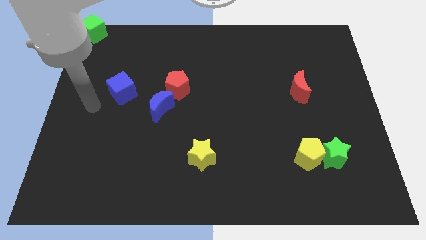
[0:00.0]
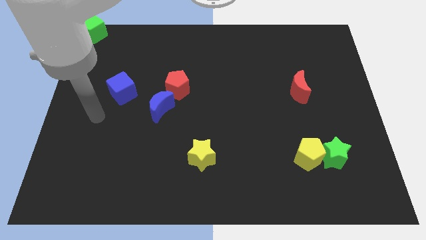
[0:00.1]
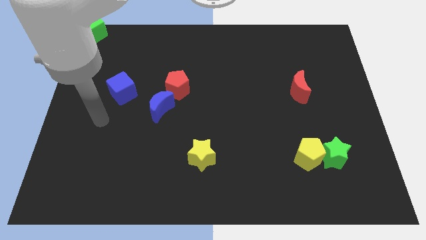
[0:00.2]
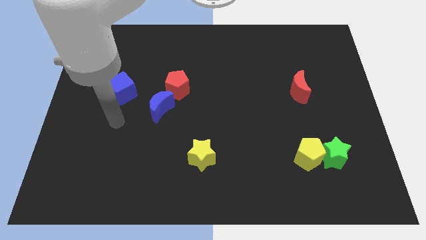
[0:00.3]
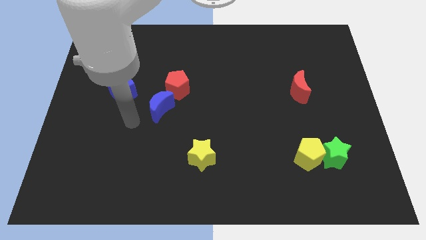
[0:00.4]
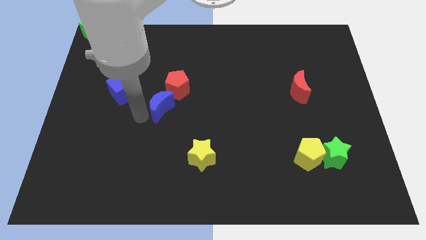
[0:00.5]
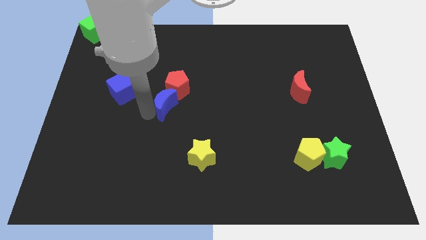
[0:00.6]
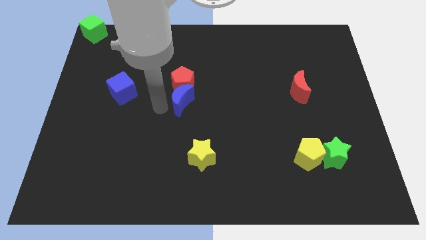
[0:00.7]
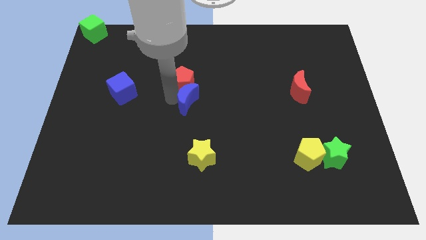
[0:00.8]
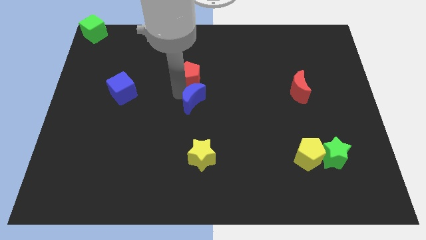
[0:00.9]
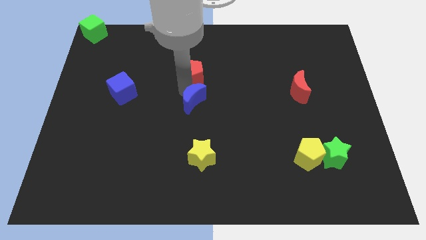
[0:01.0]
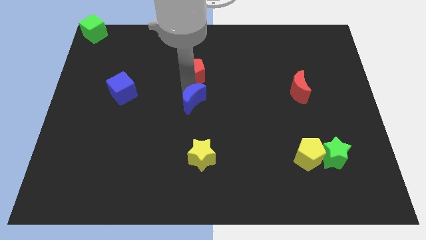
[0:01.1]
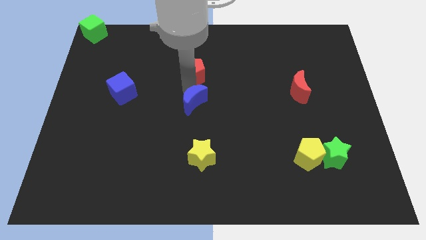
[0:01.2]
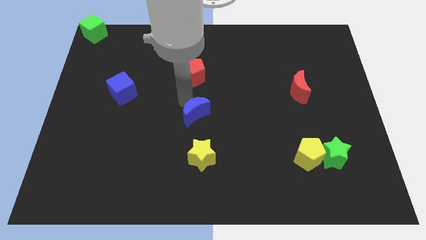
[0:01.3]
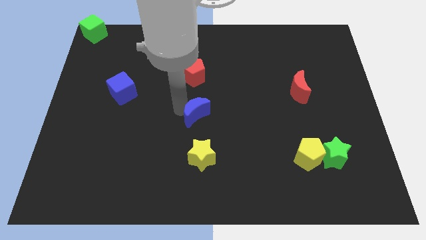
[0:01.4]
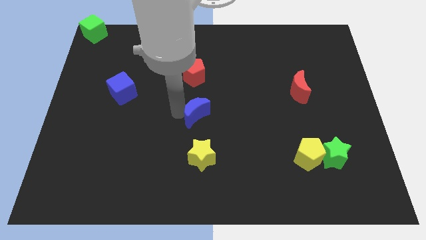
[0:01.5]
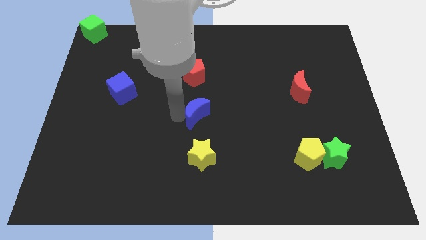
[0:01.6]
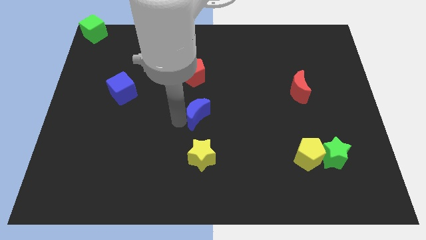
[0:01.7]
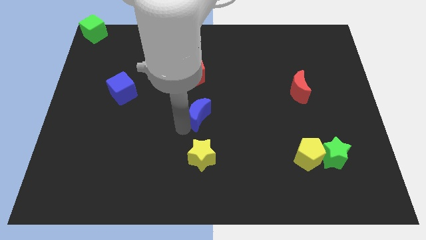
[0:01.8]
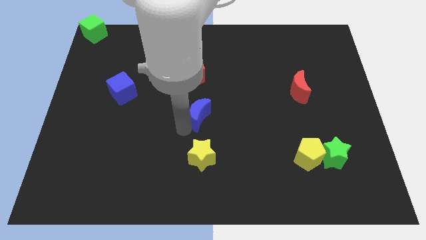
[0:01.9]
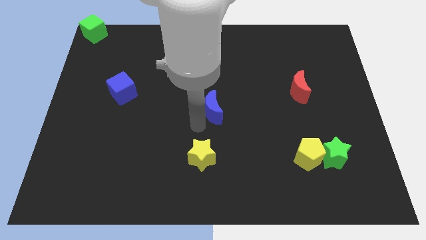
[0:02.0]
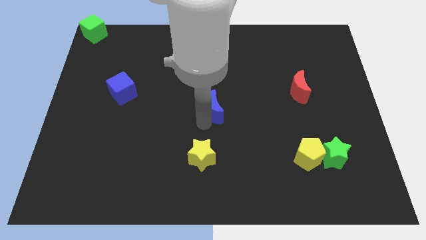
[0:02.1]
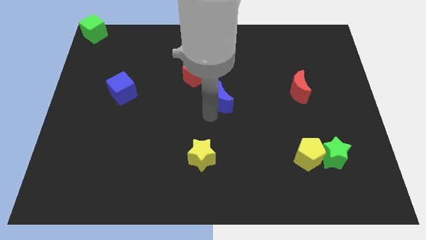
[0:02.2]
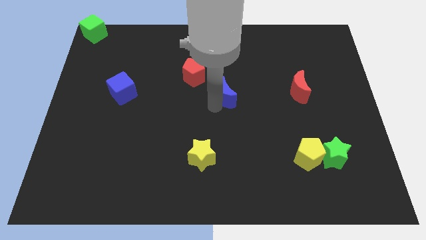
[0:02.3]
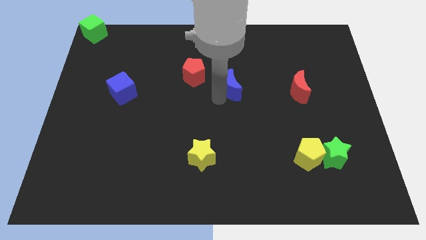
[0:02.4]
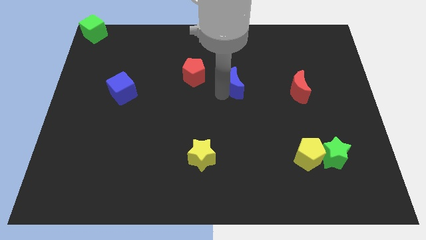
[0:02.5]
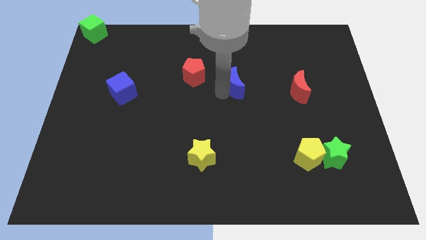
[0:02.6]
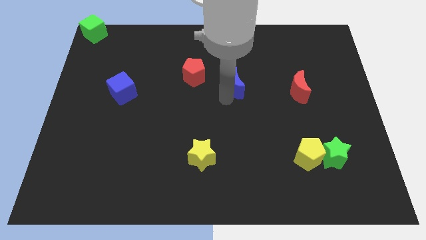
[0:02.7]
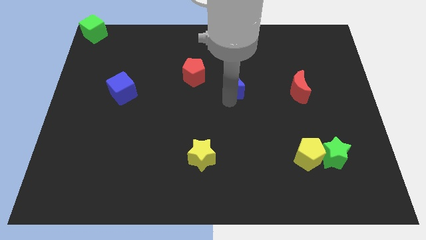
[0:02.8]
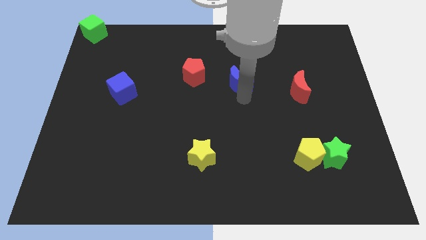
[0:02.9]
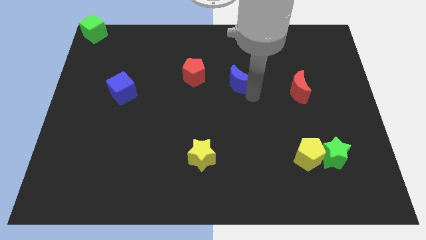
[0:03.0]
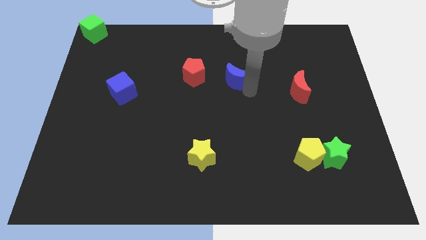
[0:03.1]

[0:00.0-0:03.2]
push the blue moon between red blocks

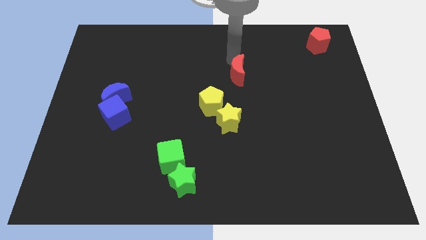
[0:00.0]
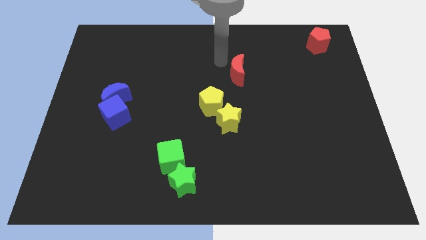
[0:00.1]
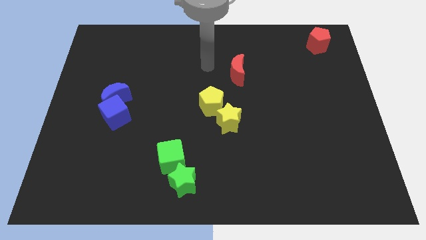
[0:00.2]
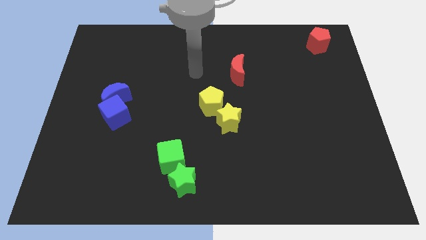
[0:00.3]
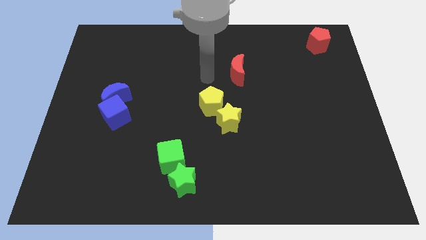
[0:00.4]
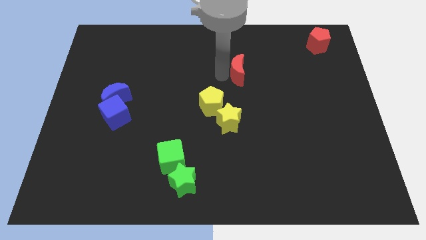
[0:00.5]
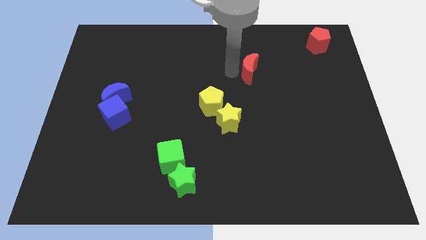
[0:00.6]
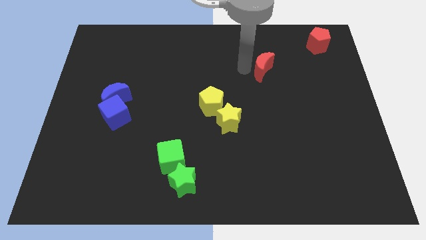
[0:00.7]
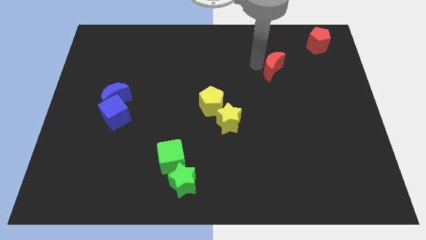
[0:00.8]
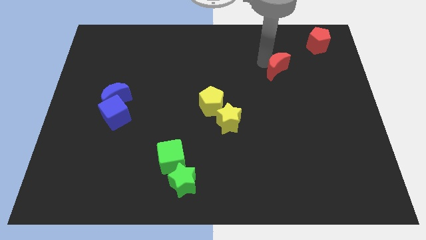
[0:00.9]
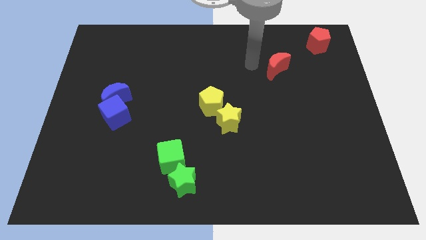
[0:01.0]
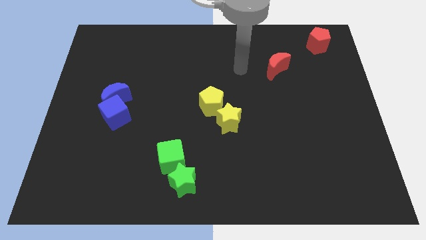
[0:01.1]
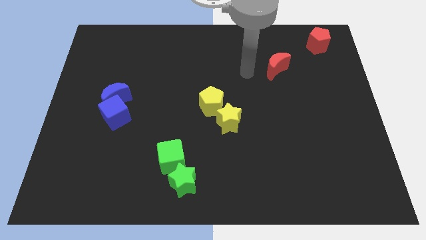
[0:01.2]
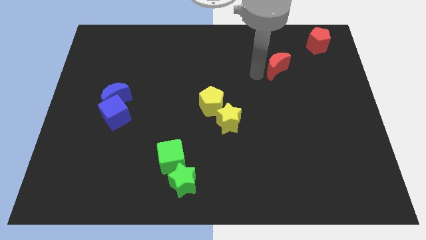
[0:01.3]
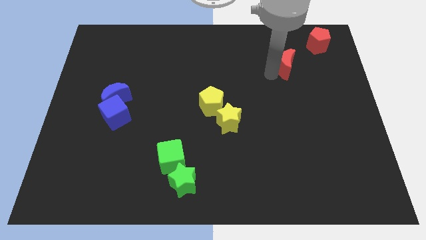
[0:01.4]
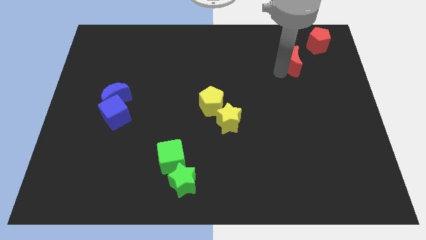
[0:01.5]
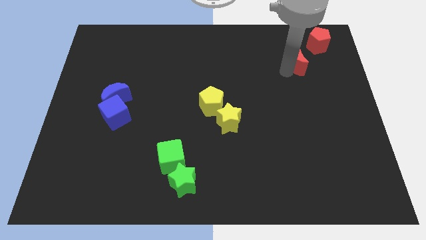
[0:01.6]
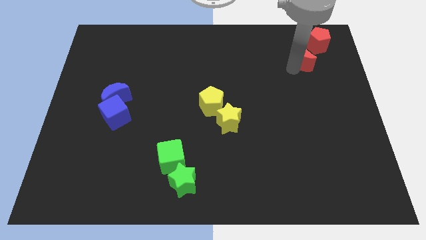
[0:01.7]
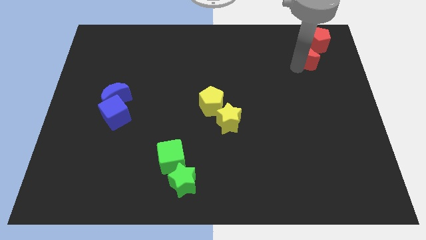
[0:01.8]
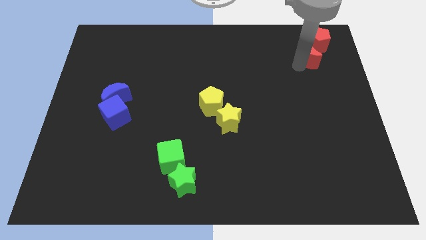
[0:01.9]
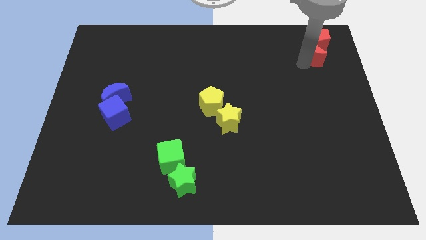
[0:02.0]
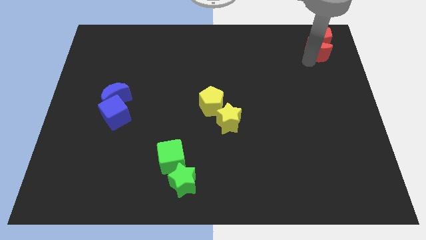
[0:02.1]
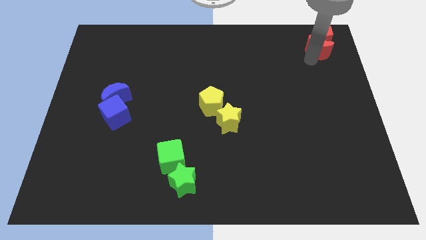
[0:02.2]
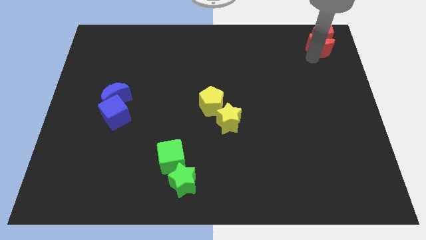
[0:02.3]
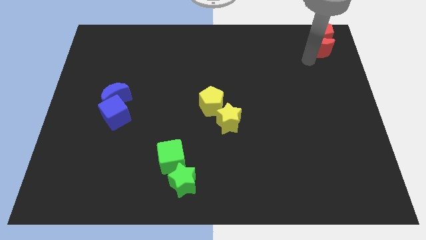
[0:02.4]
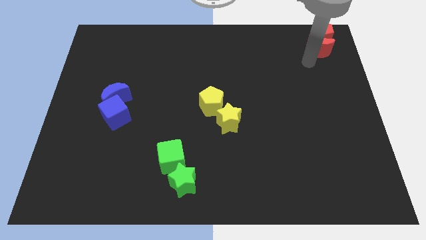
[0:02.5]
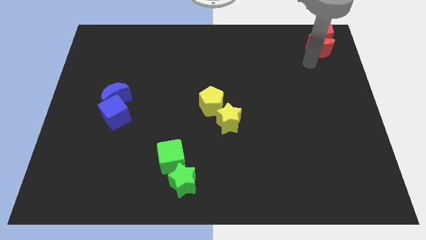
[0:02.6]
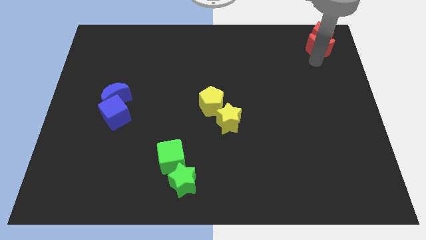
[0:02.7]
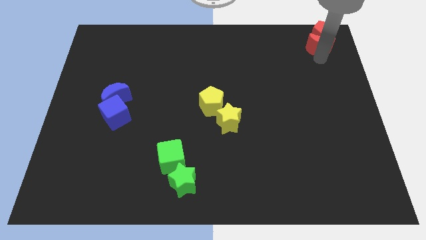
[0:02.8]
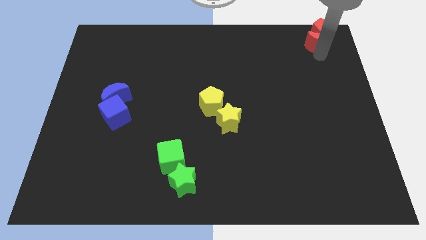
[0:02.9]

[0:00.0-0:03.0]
push the red crescent to the bottom of the red pentagon

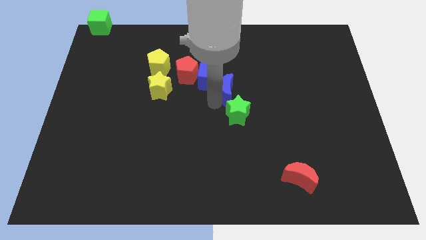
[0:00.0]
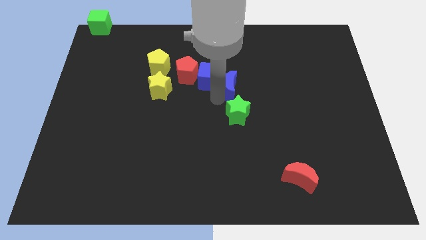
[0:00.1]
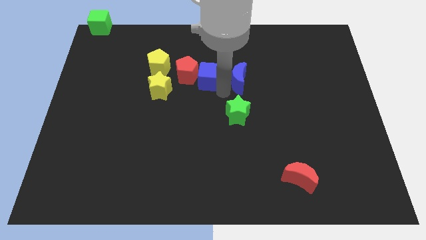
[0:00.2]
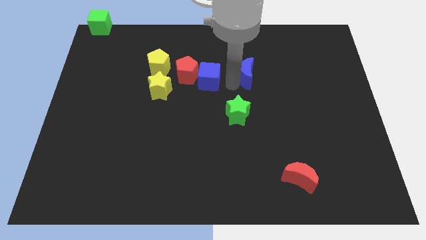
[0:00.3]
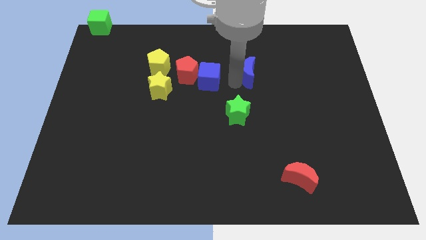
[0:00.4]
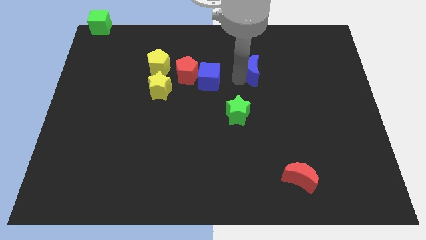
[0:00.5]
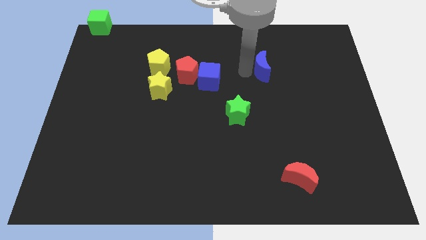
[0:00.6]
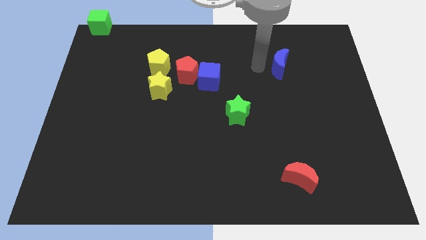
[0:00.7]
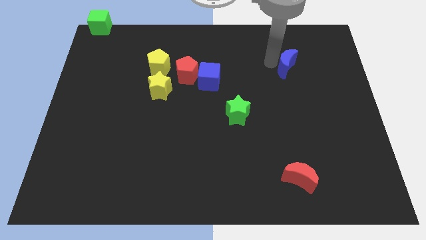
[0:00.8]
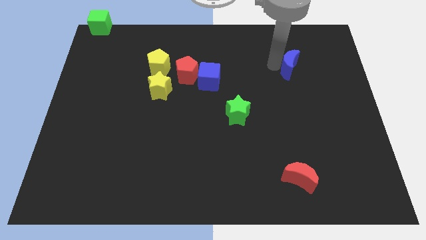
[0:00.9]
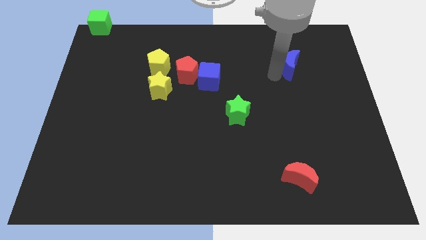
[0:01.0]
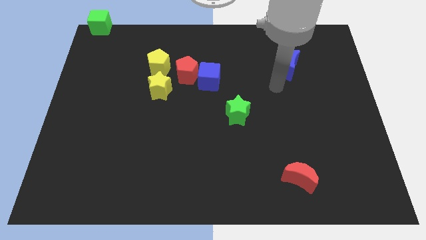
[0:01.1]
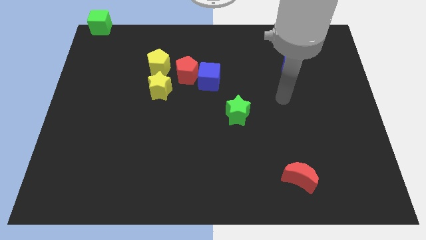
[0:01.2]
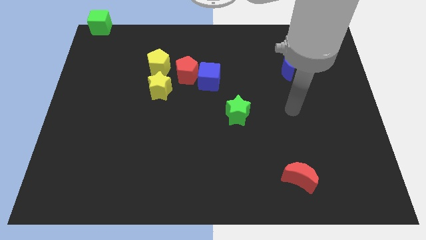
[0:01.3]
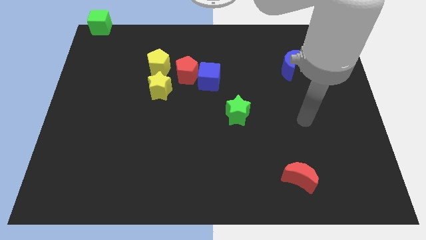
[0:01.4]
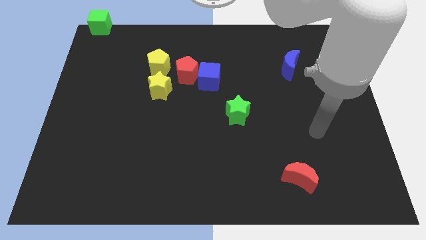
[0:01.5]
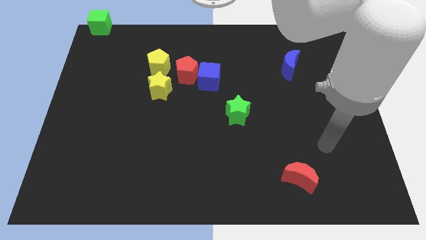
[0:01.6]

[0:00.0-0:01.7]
push the blue moon towards the top right corner of the board

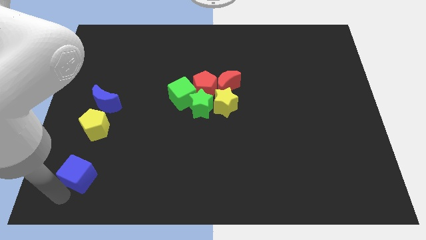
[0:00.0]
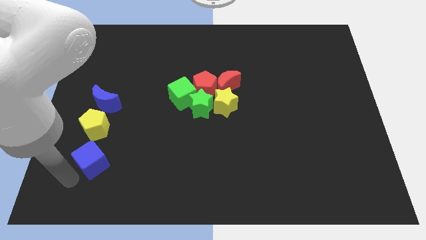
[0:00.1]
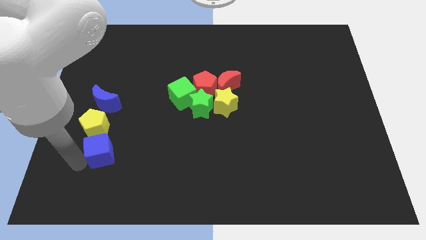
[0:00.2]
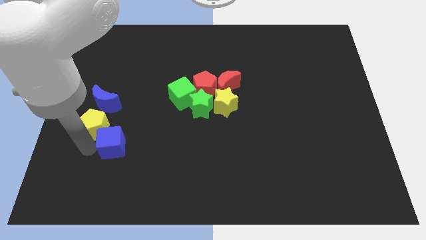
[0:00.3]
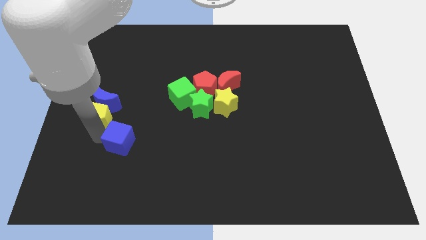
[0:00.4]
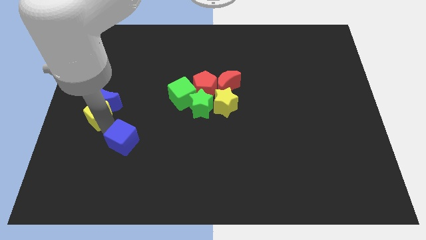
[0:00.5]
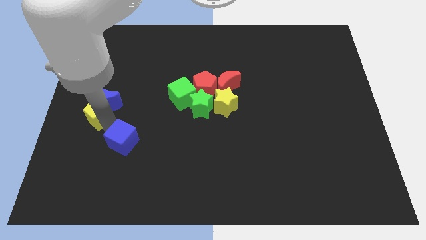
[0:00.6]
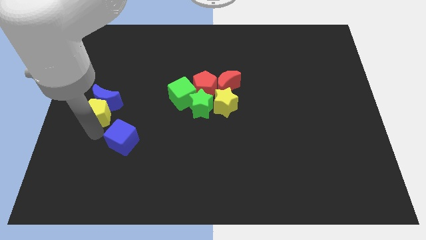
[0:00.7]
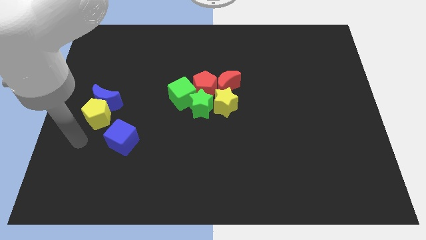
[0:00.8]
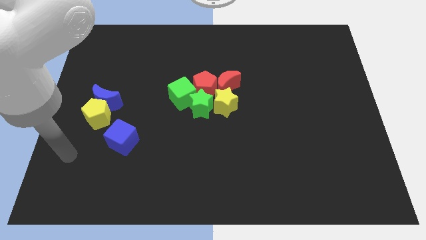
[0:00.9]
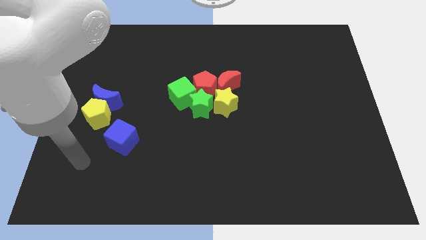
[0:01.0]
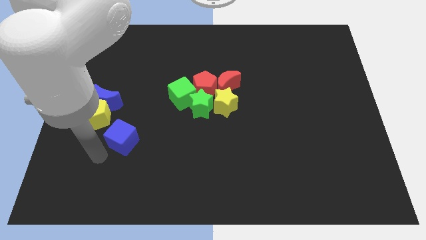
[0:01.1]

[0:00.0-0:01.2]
separate the blue cube from yellow pentagon
